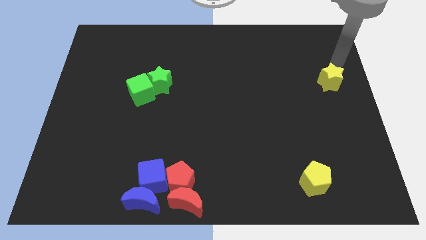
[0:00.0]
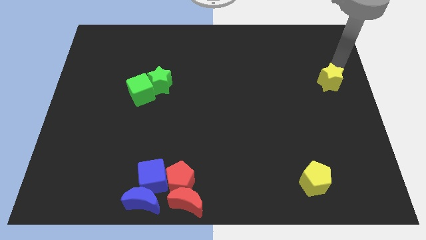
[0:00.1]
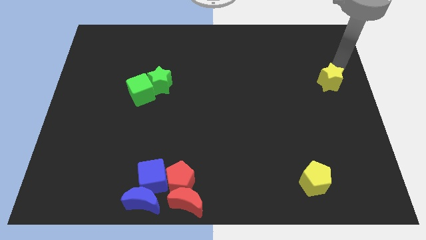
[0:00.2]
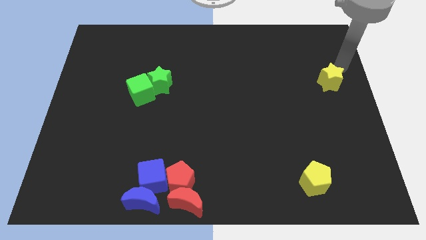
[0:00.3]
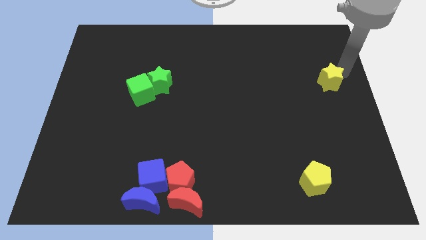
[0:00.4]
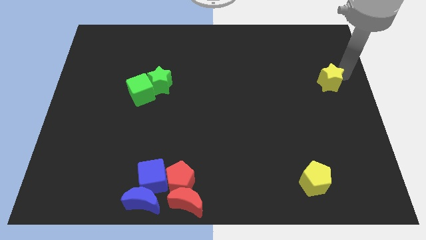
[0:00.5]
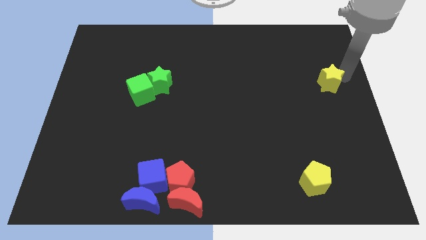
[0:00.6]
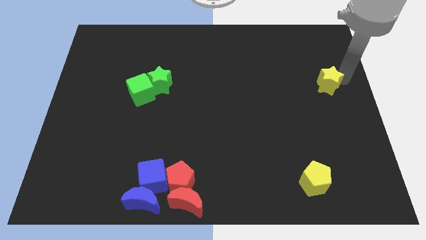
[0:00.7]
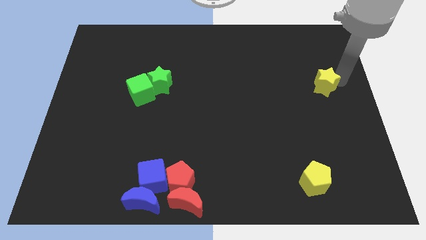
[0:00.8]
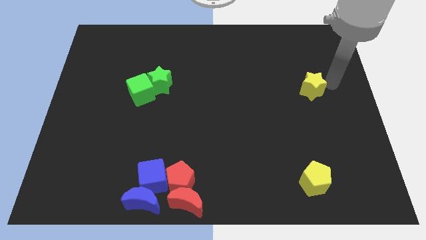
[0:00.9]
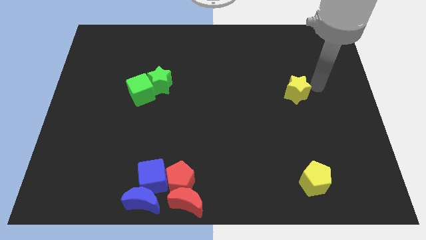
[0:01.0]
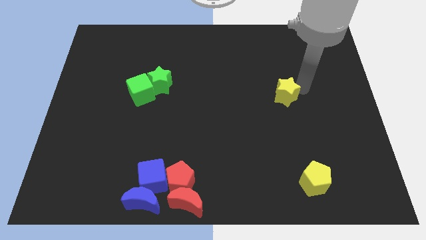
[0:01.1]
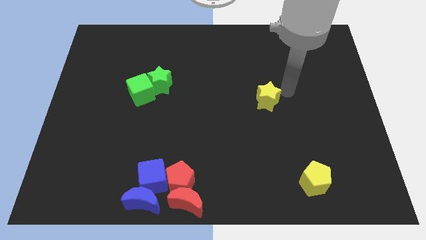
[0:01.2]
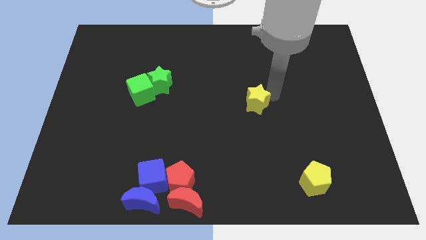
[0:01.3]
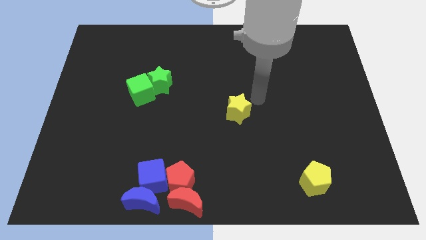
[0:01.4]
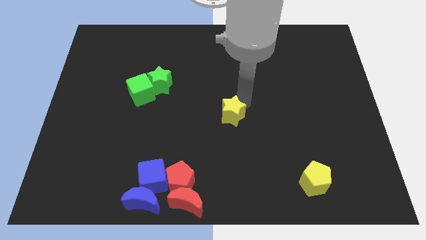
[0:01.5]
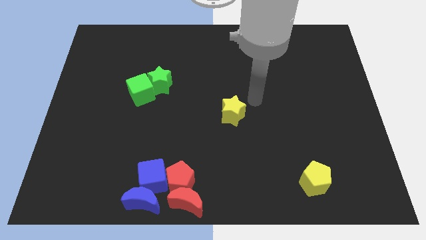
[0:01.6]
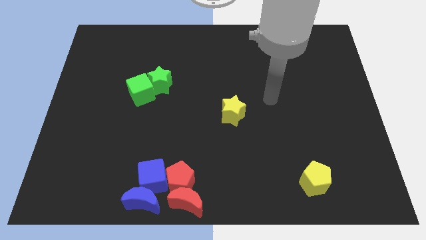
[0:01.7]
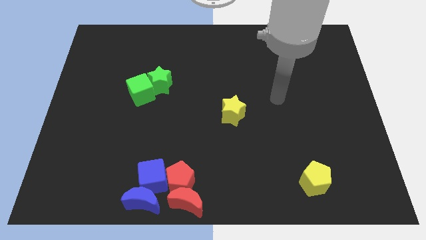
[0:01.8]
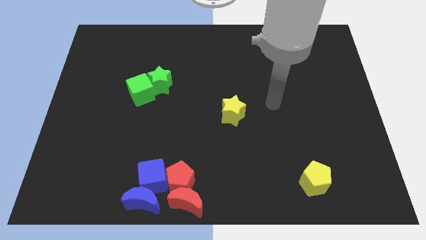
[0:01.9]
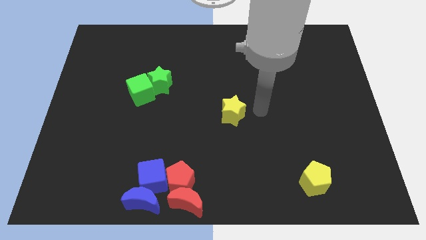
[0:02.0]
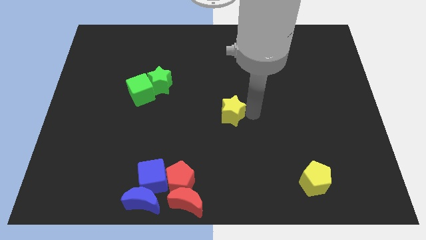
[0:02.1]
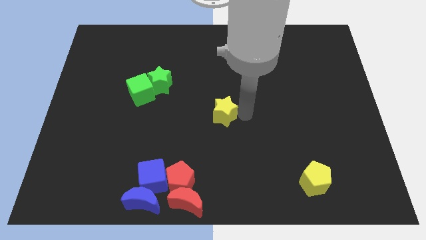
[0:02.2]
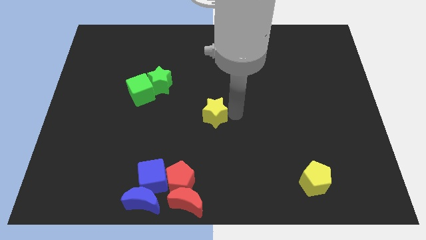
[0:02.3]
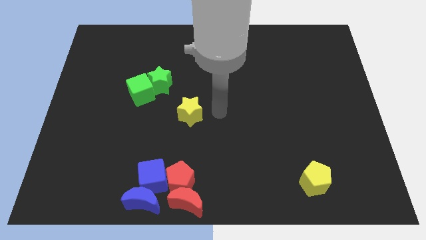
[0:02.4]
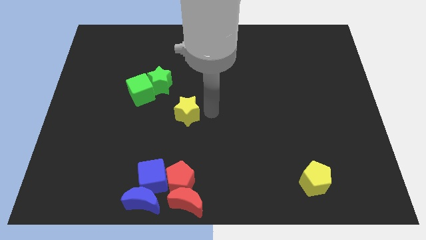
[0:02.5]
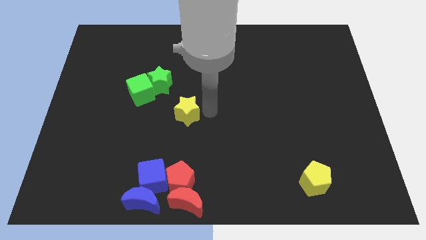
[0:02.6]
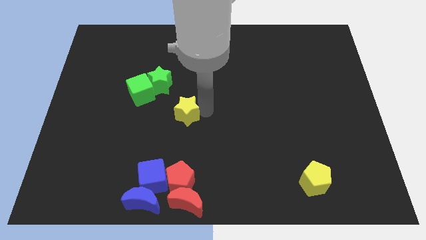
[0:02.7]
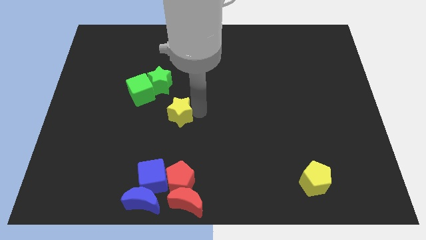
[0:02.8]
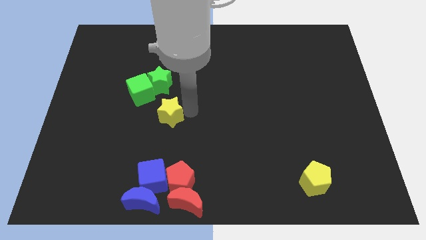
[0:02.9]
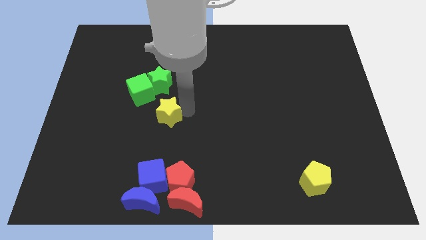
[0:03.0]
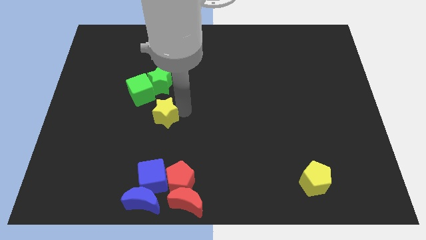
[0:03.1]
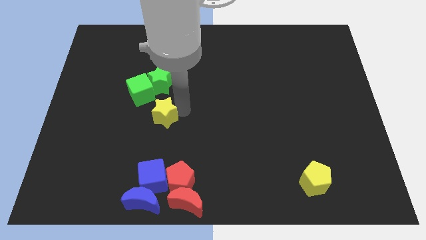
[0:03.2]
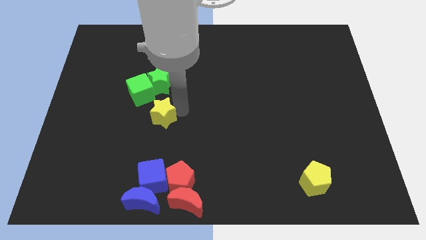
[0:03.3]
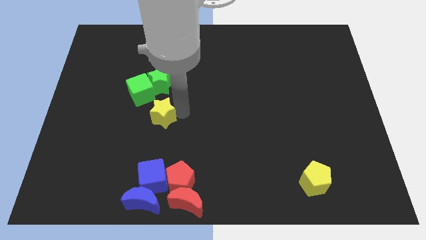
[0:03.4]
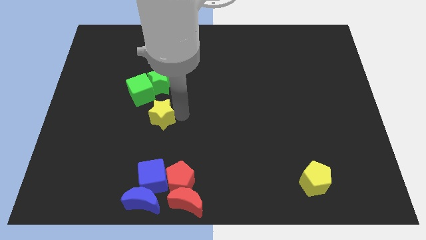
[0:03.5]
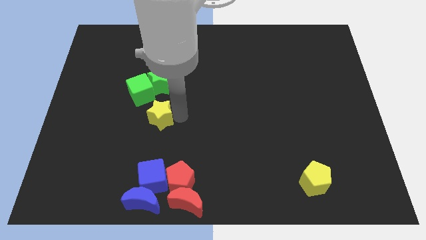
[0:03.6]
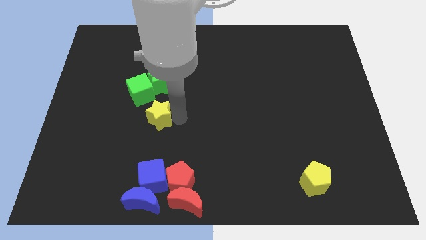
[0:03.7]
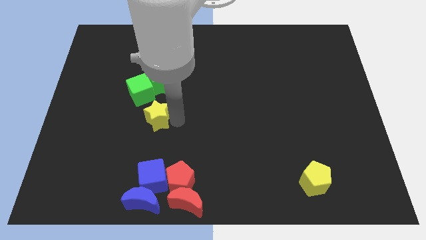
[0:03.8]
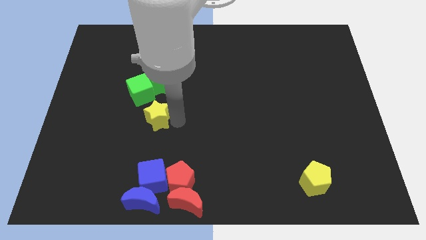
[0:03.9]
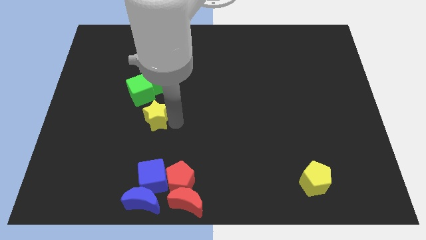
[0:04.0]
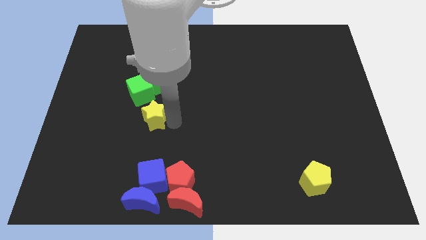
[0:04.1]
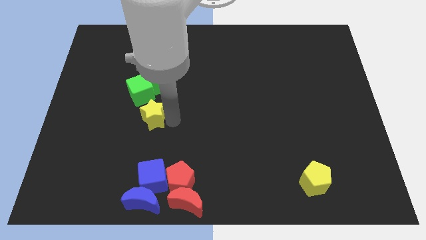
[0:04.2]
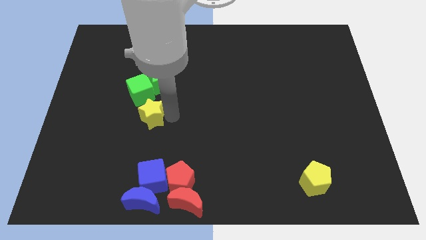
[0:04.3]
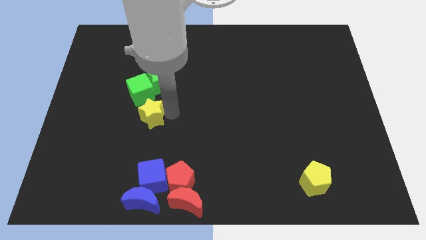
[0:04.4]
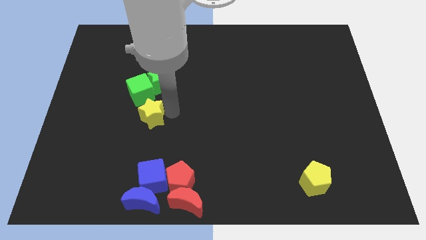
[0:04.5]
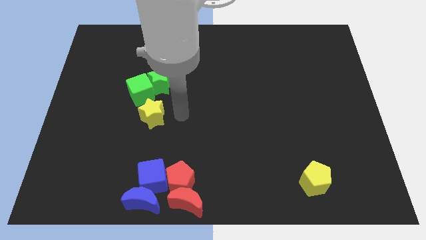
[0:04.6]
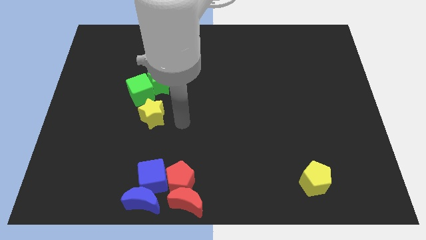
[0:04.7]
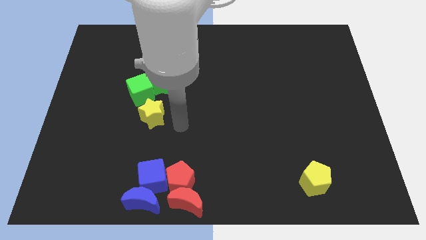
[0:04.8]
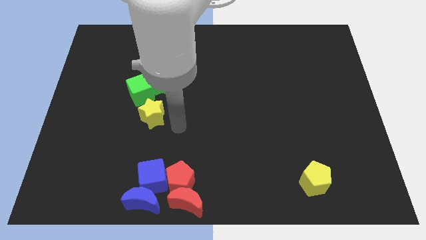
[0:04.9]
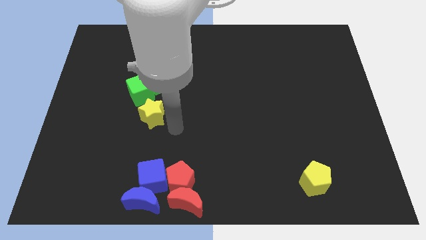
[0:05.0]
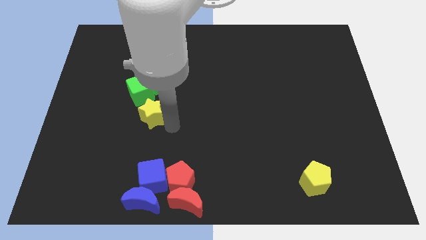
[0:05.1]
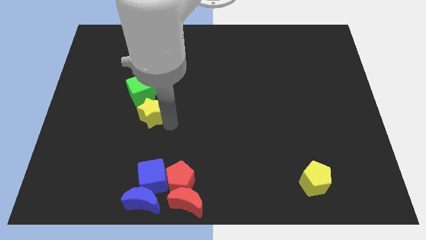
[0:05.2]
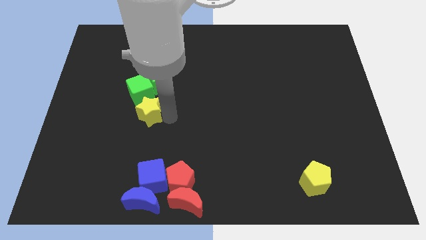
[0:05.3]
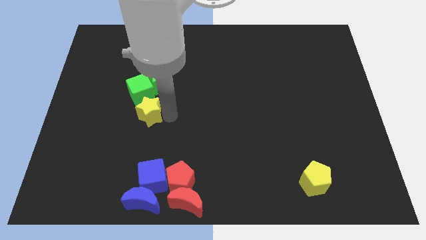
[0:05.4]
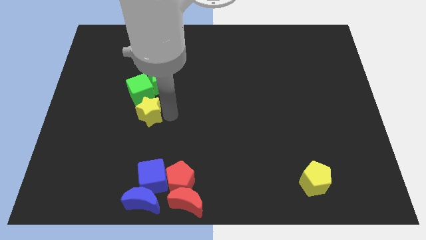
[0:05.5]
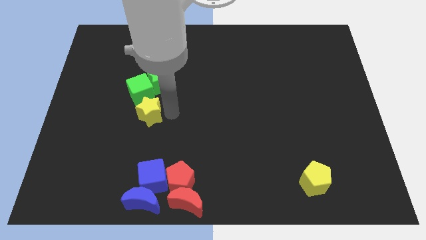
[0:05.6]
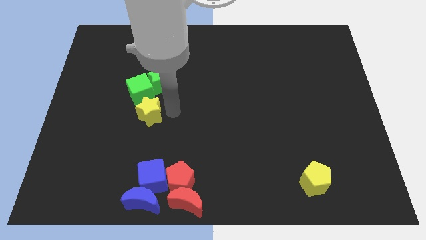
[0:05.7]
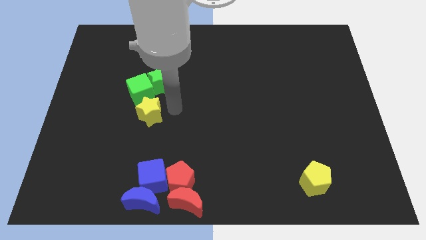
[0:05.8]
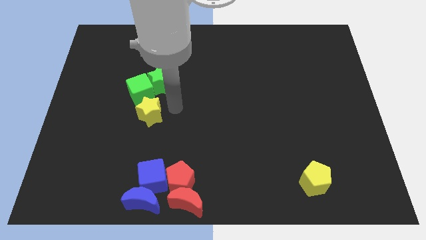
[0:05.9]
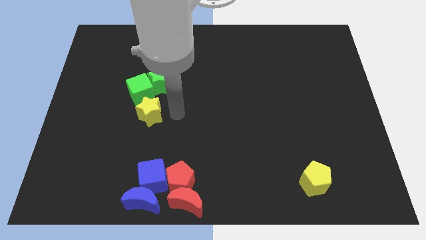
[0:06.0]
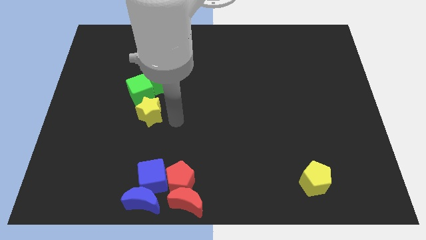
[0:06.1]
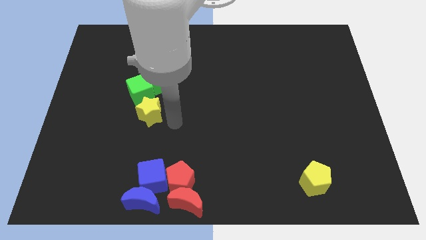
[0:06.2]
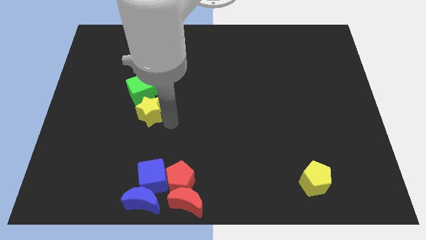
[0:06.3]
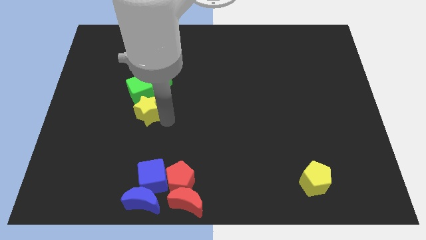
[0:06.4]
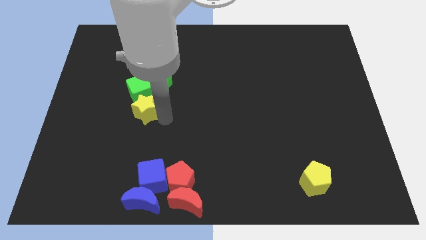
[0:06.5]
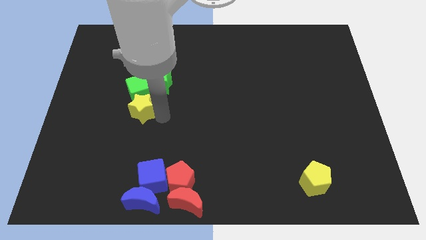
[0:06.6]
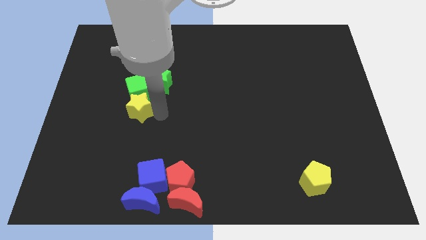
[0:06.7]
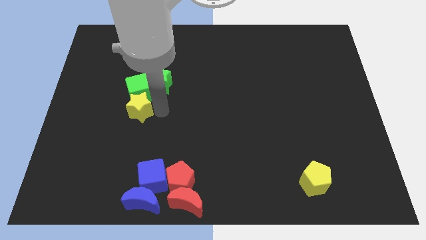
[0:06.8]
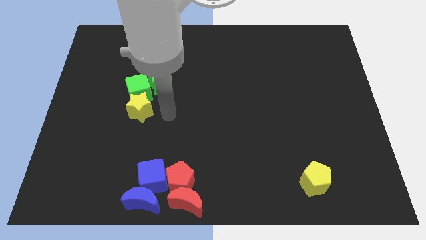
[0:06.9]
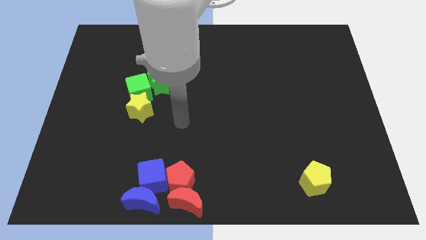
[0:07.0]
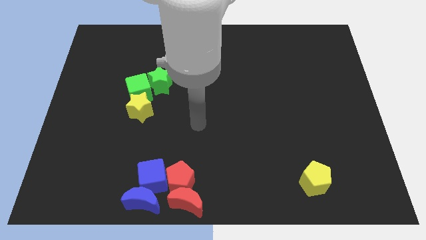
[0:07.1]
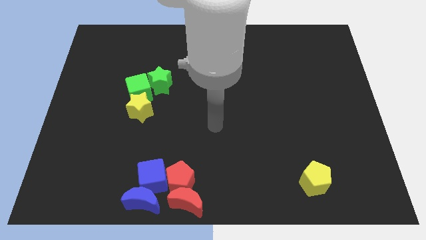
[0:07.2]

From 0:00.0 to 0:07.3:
move yellow star near green cube

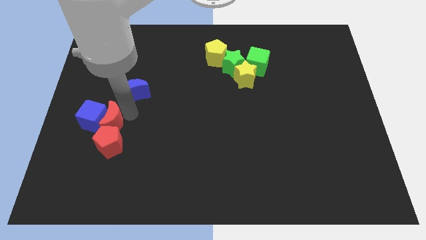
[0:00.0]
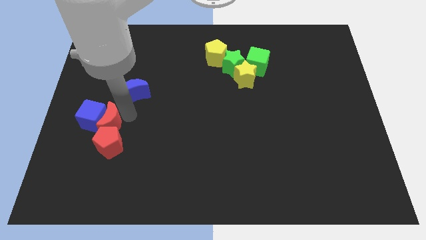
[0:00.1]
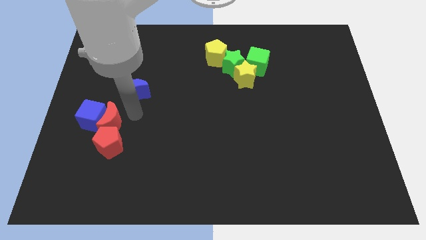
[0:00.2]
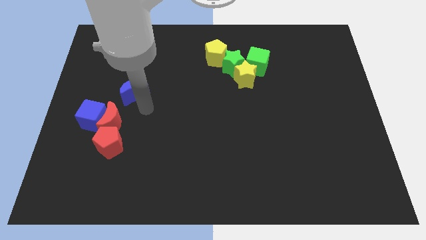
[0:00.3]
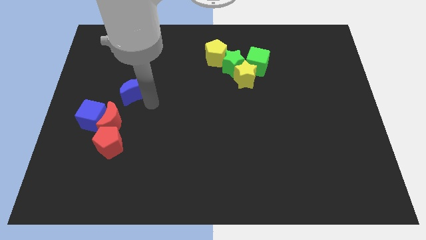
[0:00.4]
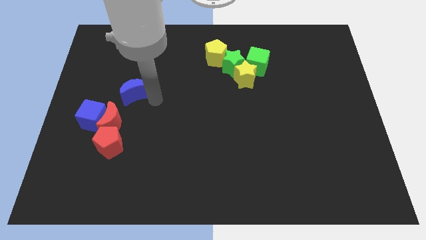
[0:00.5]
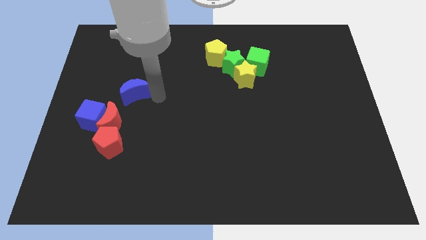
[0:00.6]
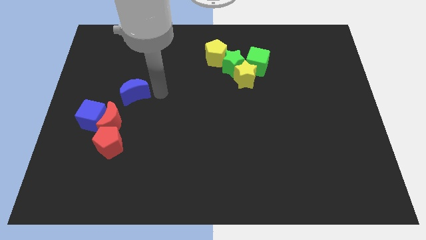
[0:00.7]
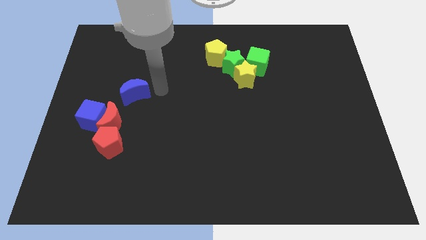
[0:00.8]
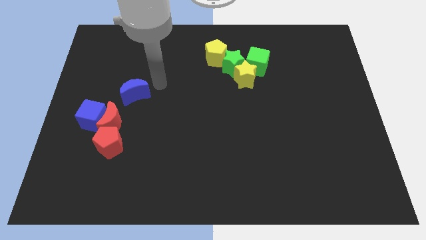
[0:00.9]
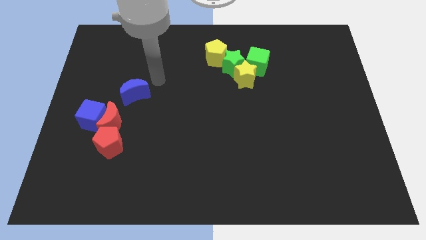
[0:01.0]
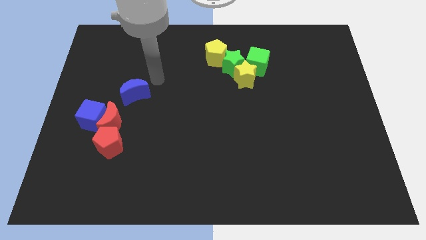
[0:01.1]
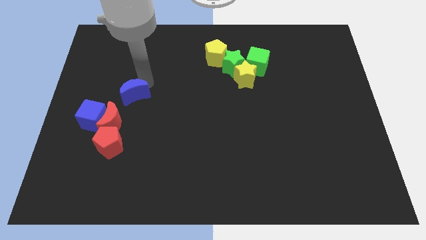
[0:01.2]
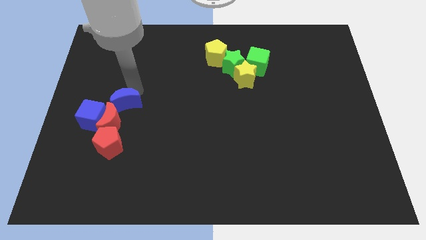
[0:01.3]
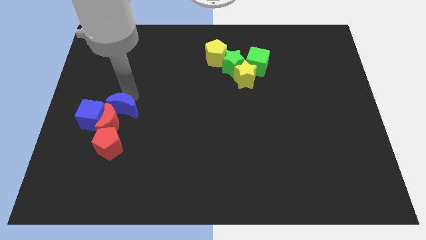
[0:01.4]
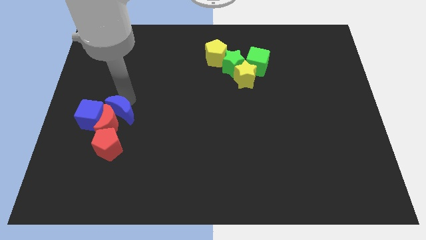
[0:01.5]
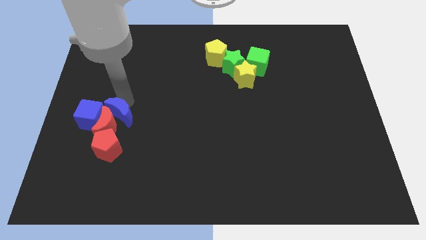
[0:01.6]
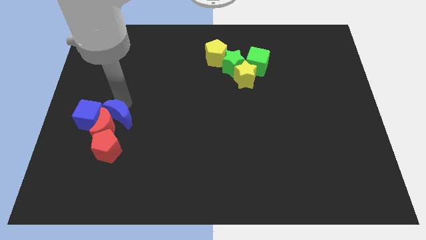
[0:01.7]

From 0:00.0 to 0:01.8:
push the red crescent and blue cube with blue crescent
